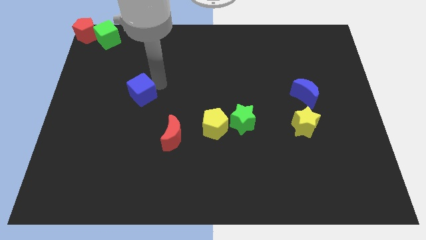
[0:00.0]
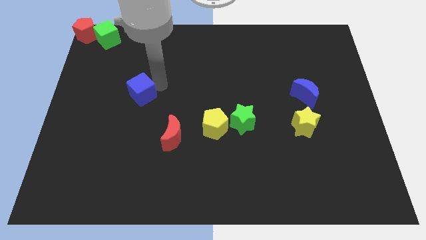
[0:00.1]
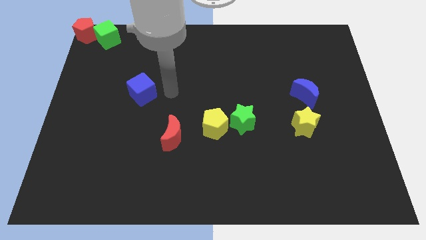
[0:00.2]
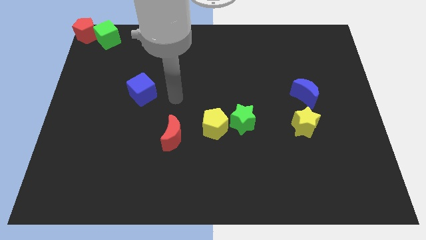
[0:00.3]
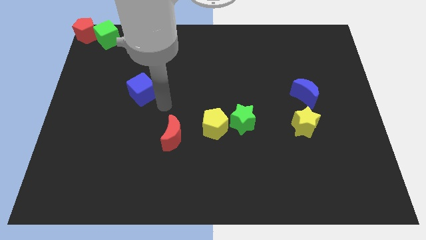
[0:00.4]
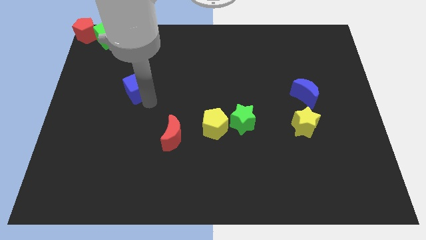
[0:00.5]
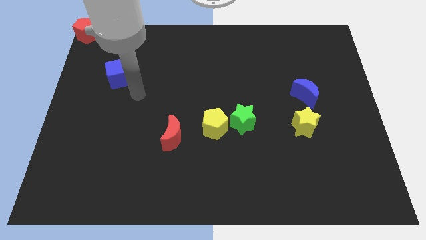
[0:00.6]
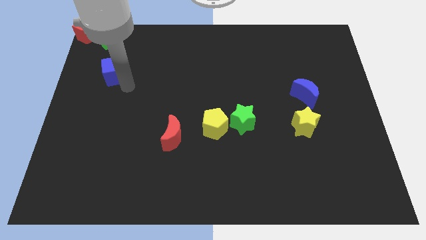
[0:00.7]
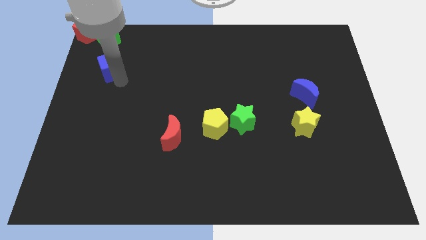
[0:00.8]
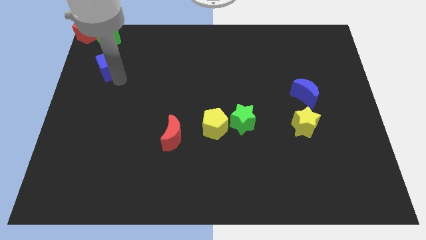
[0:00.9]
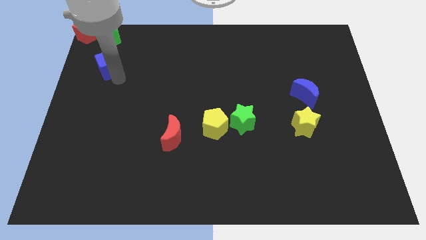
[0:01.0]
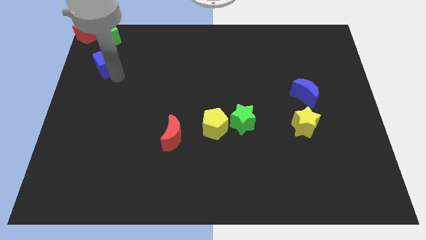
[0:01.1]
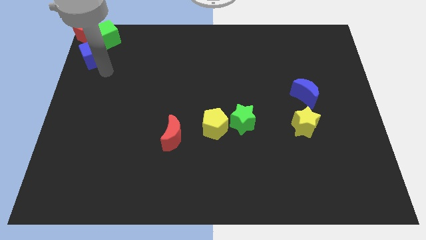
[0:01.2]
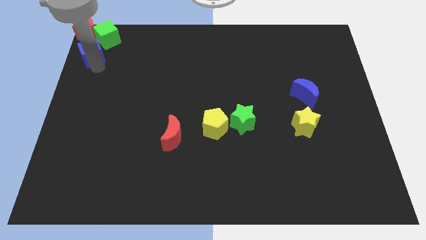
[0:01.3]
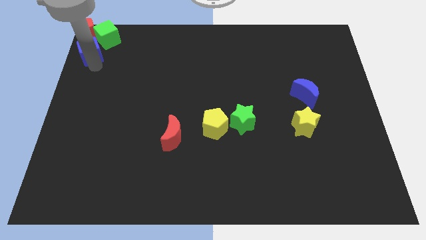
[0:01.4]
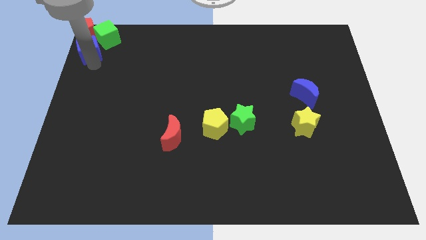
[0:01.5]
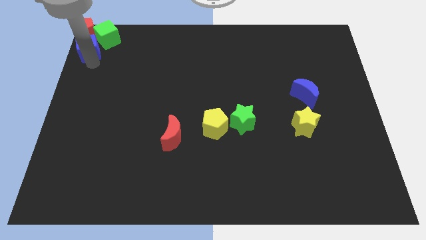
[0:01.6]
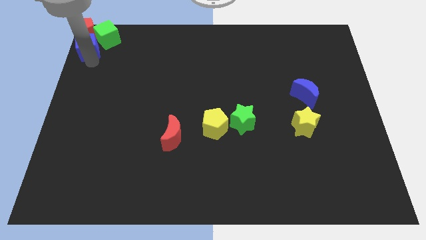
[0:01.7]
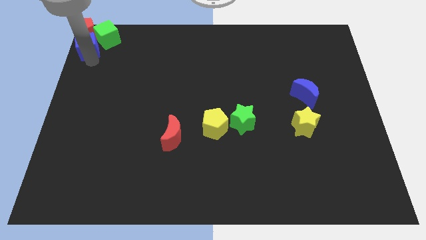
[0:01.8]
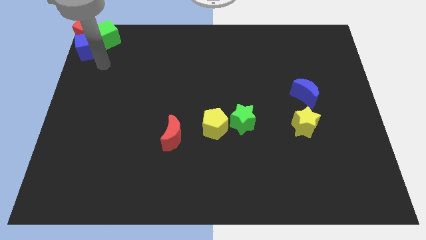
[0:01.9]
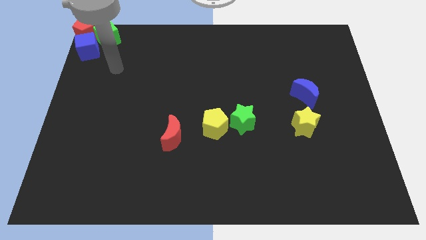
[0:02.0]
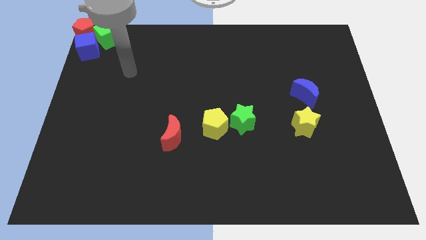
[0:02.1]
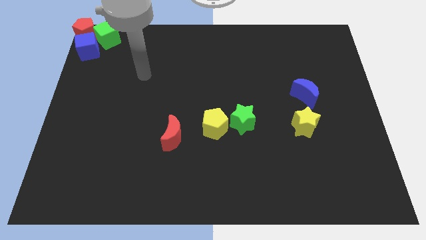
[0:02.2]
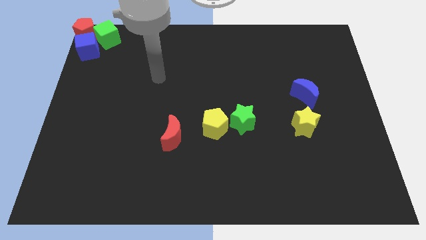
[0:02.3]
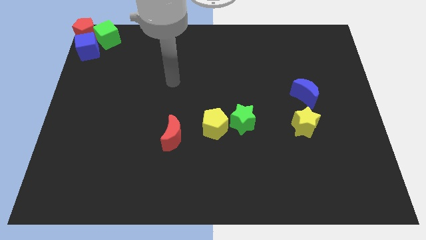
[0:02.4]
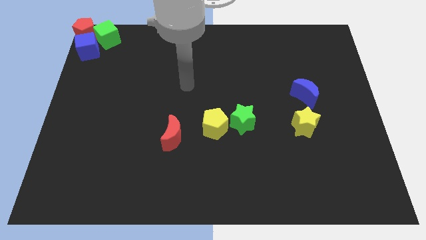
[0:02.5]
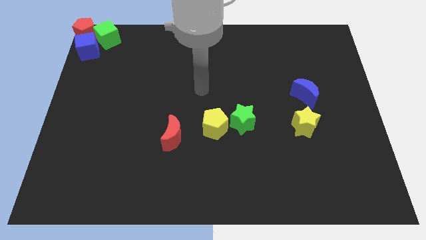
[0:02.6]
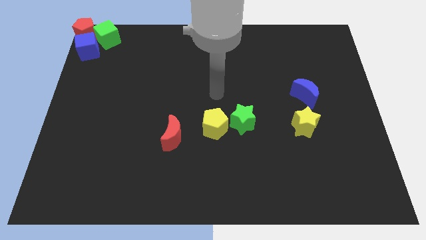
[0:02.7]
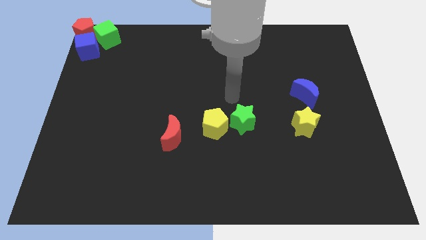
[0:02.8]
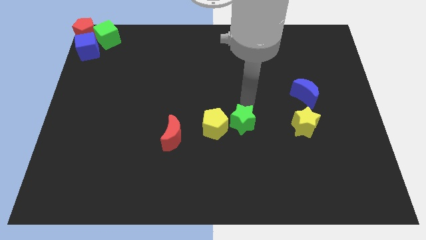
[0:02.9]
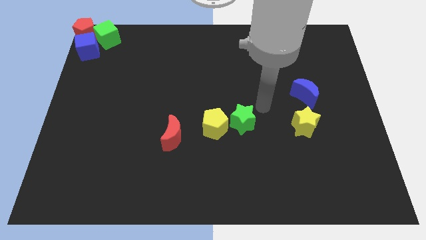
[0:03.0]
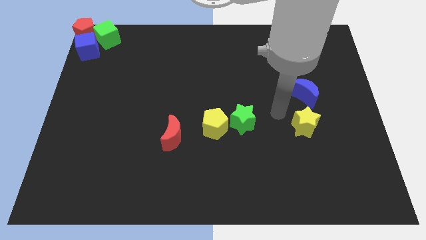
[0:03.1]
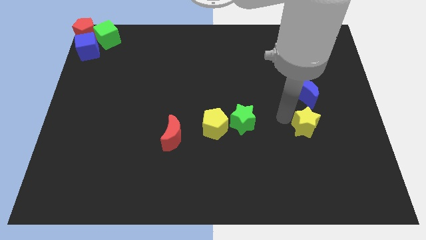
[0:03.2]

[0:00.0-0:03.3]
push the blue cube towards the red pentagon

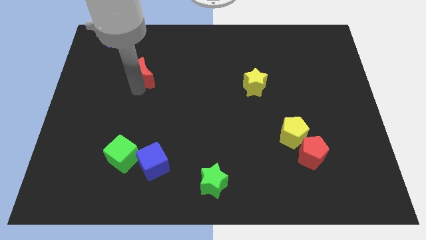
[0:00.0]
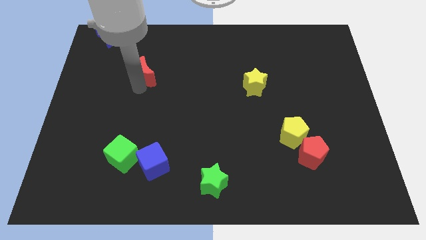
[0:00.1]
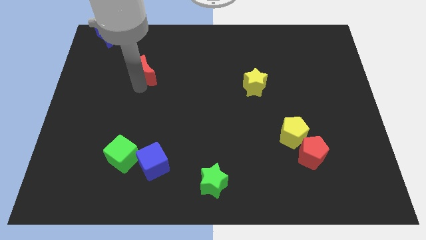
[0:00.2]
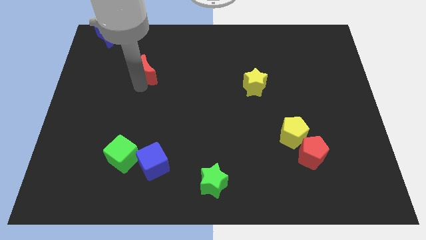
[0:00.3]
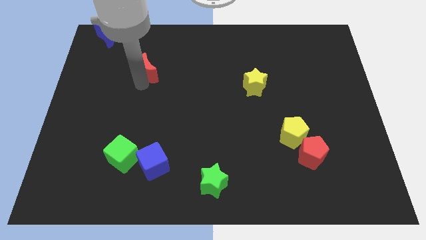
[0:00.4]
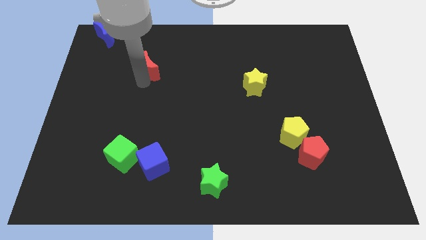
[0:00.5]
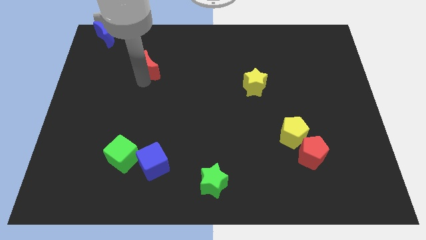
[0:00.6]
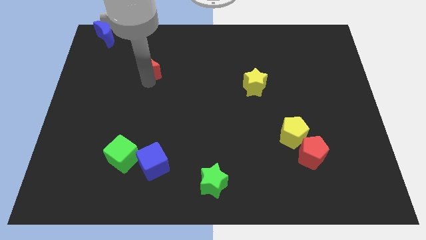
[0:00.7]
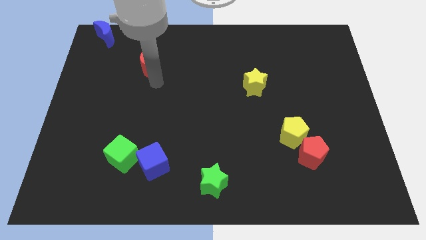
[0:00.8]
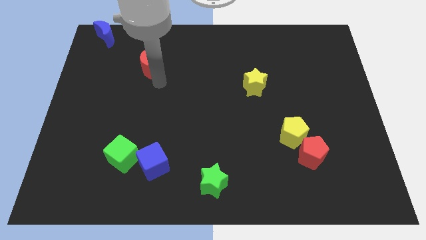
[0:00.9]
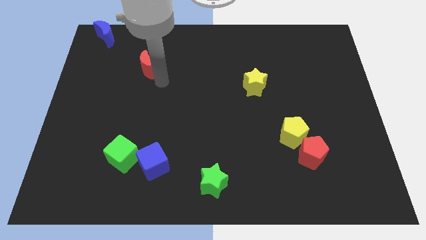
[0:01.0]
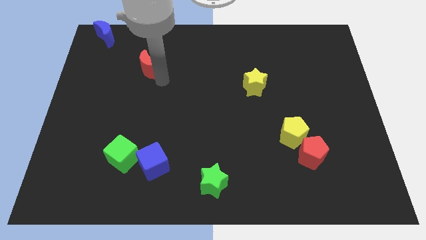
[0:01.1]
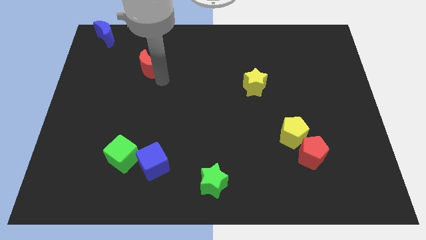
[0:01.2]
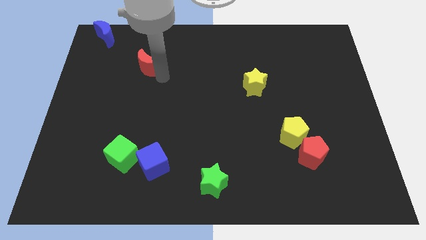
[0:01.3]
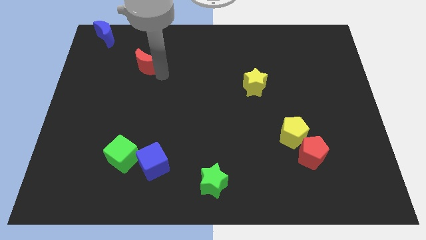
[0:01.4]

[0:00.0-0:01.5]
put the red moon diagonally top left to the yellow star

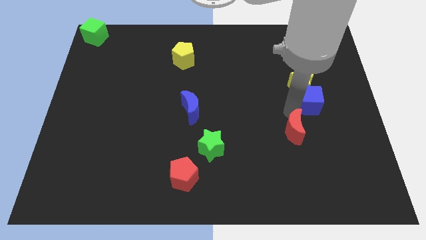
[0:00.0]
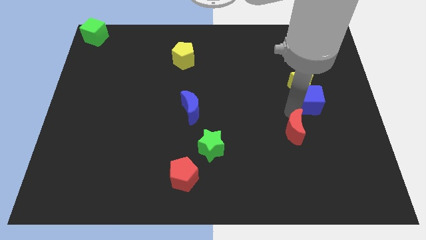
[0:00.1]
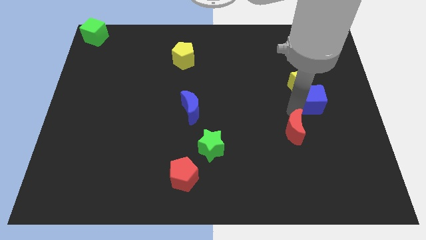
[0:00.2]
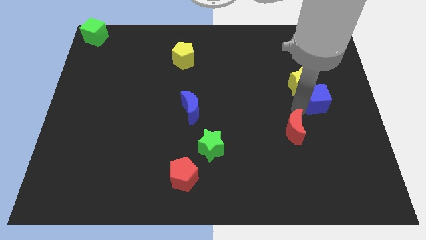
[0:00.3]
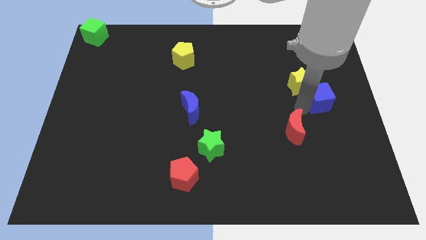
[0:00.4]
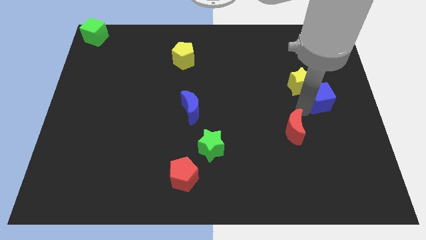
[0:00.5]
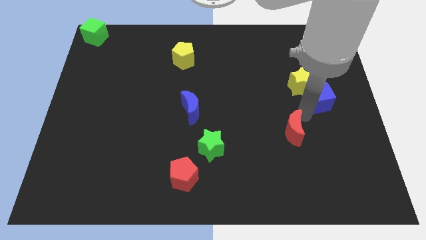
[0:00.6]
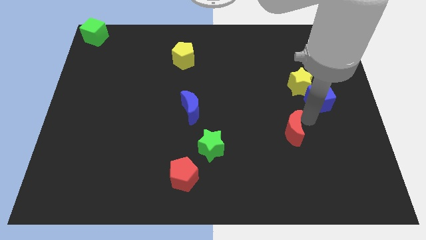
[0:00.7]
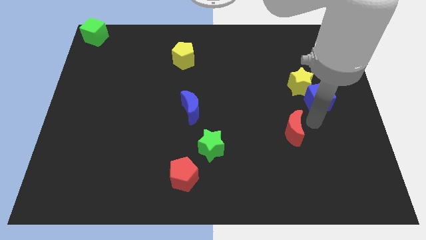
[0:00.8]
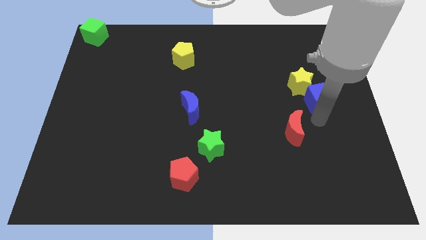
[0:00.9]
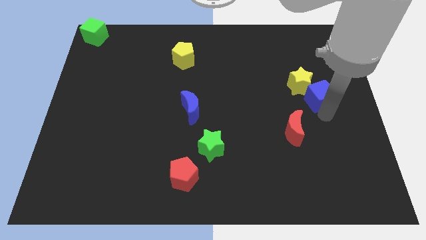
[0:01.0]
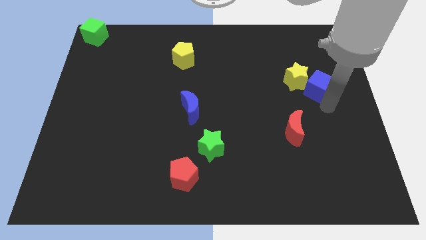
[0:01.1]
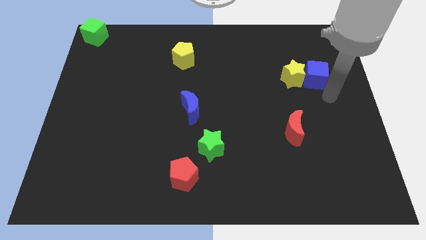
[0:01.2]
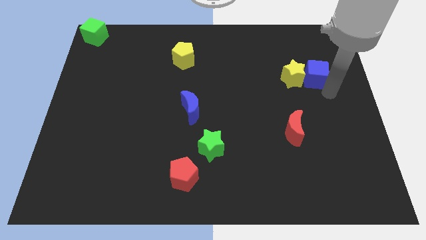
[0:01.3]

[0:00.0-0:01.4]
move the blue cube towards the right side of the yellow star

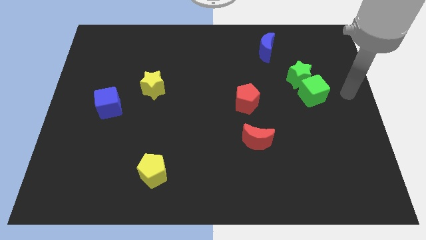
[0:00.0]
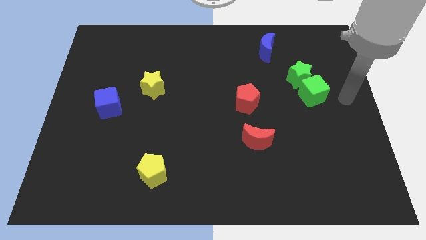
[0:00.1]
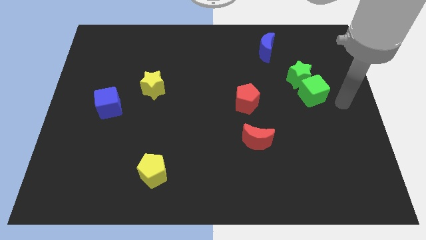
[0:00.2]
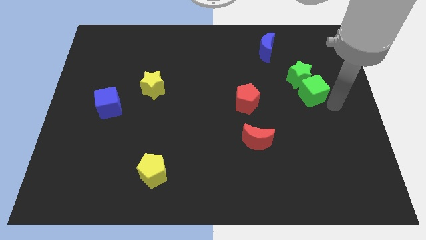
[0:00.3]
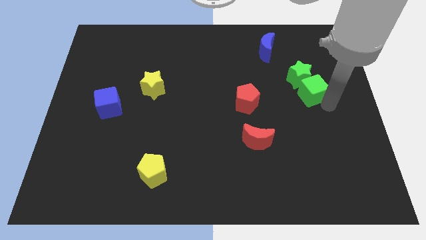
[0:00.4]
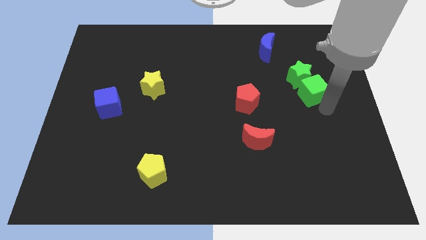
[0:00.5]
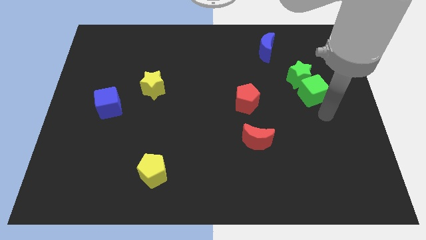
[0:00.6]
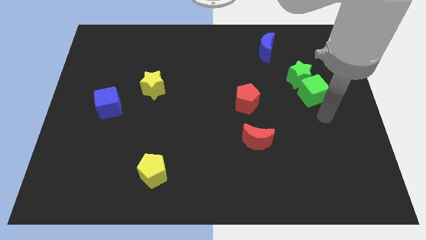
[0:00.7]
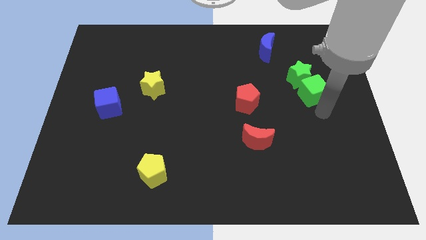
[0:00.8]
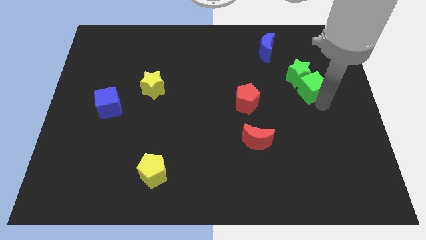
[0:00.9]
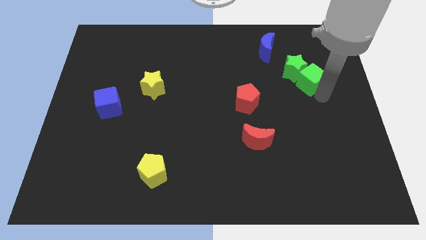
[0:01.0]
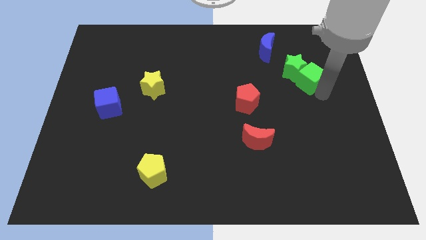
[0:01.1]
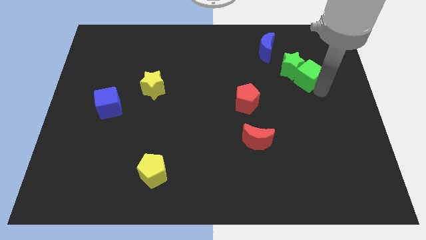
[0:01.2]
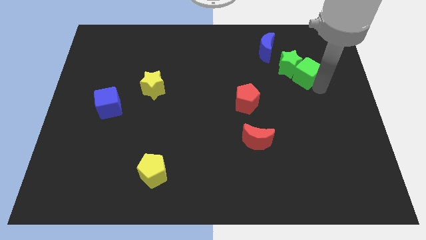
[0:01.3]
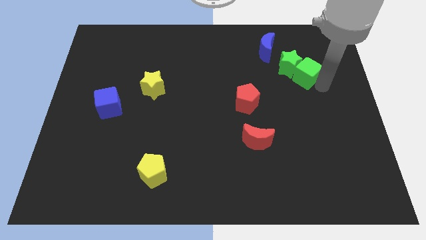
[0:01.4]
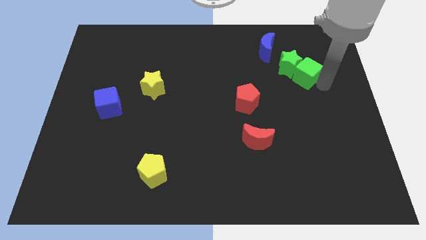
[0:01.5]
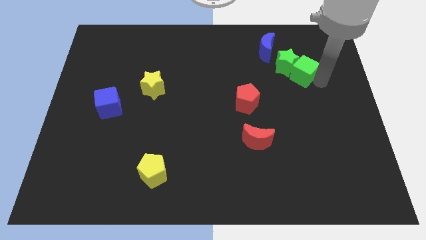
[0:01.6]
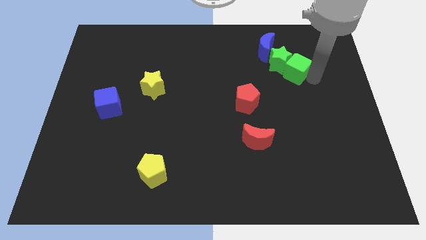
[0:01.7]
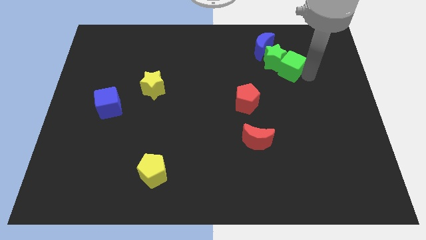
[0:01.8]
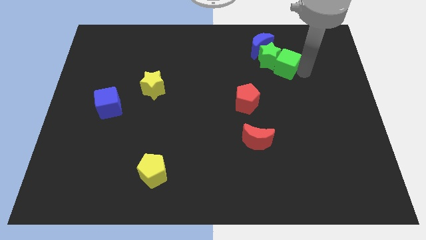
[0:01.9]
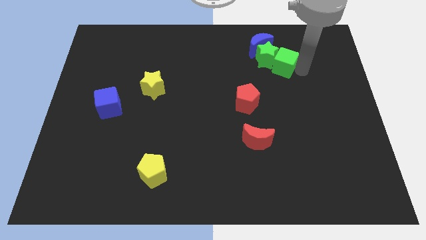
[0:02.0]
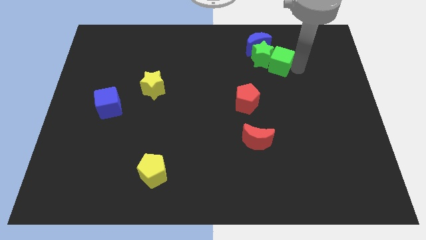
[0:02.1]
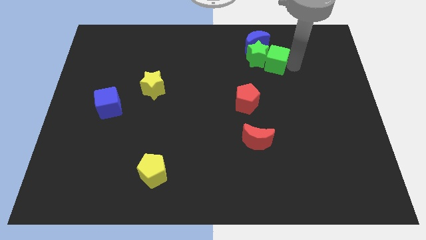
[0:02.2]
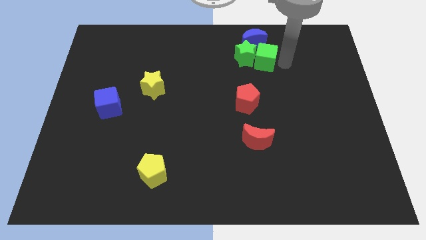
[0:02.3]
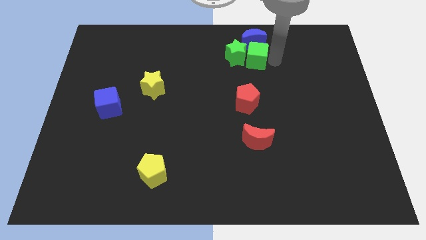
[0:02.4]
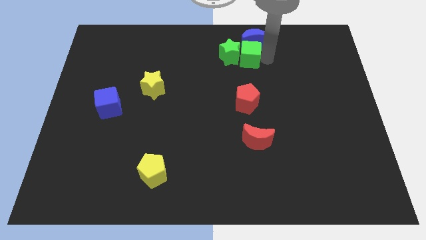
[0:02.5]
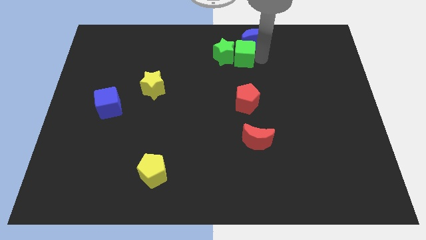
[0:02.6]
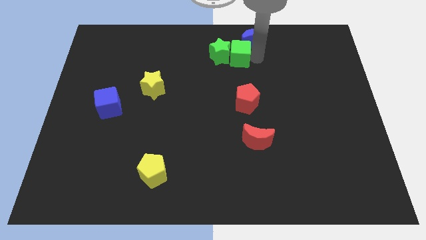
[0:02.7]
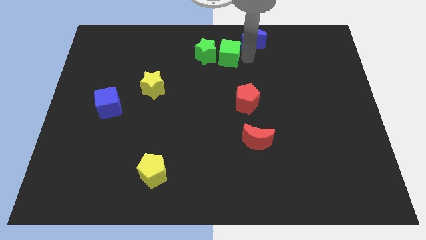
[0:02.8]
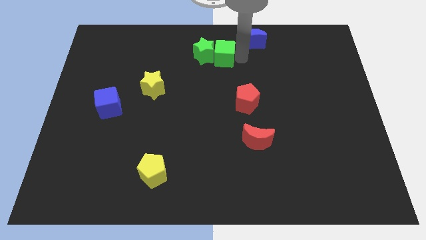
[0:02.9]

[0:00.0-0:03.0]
move green cube to the top center
